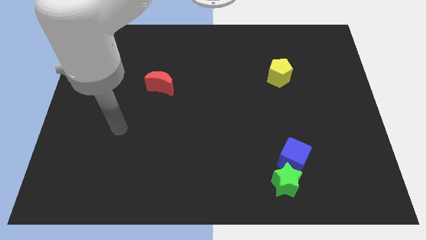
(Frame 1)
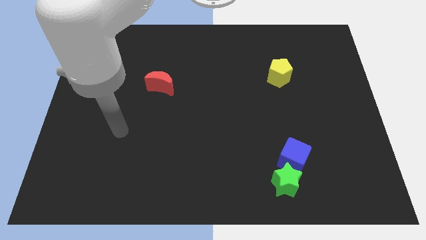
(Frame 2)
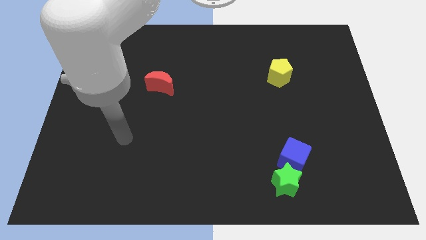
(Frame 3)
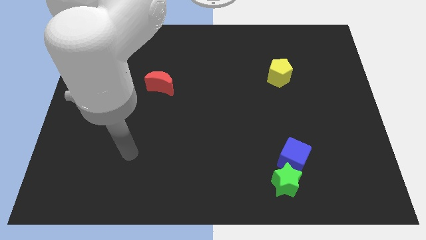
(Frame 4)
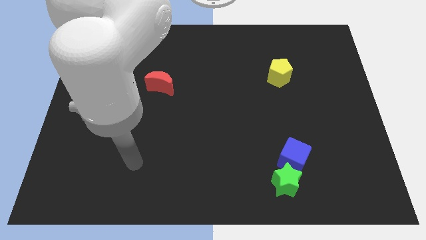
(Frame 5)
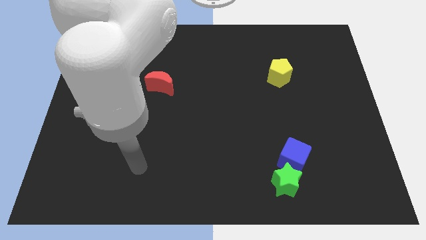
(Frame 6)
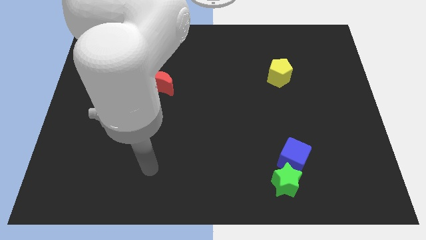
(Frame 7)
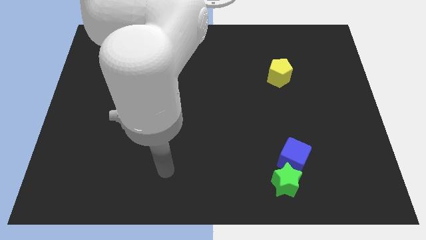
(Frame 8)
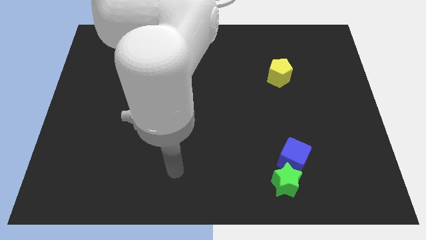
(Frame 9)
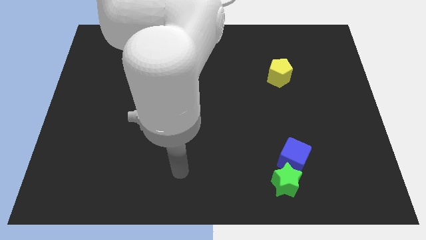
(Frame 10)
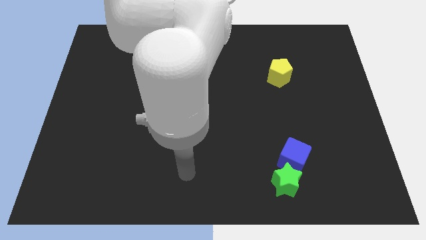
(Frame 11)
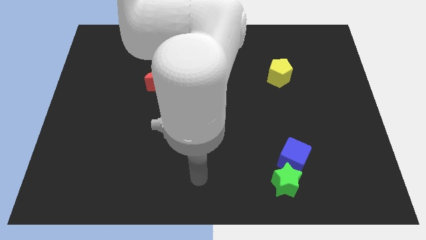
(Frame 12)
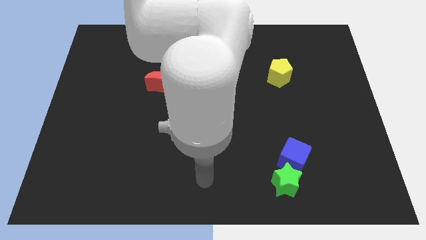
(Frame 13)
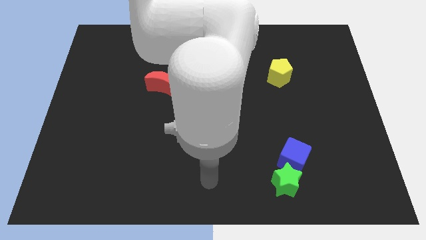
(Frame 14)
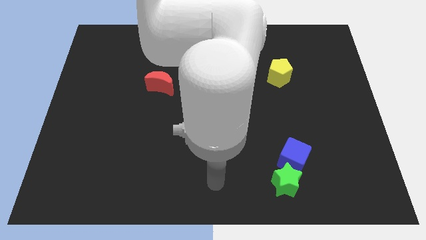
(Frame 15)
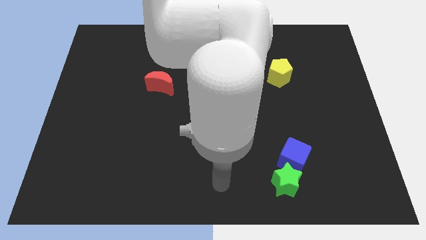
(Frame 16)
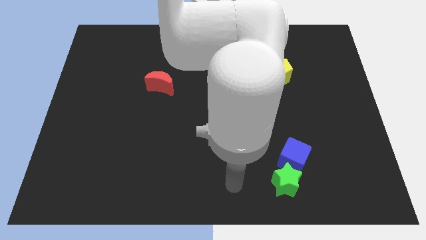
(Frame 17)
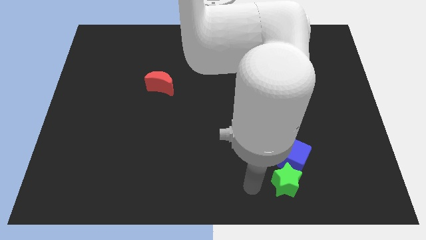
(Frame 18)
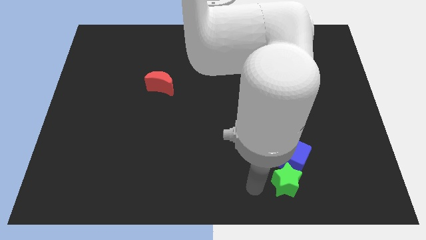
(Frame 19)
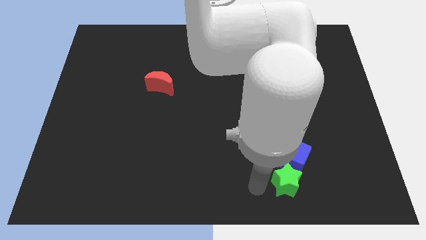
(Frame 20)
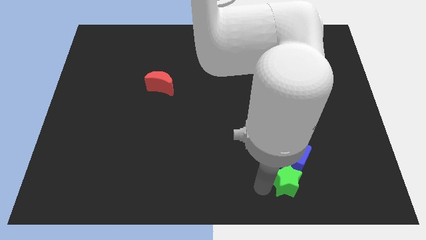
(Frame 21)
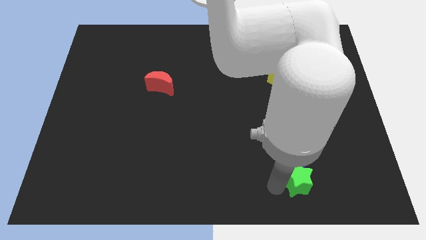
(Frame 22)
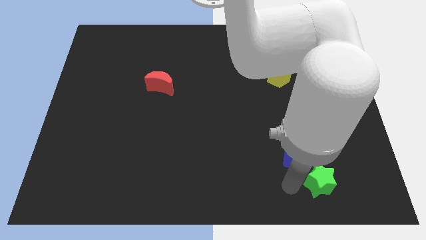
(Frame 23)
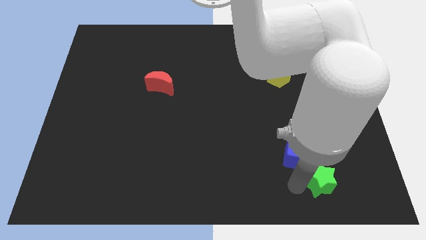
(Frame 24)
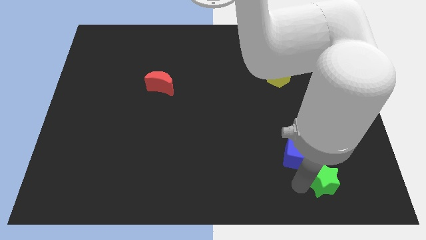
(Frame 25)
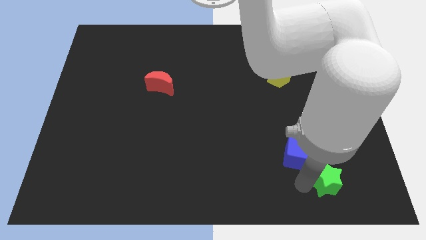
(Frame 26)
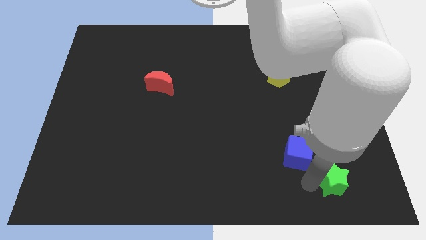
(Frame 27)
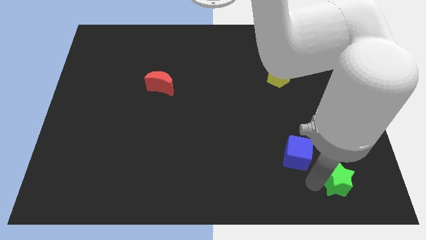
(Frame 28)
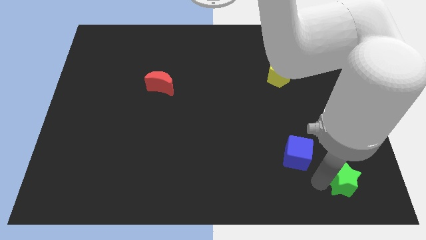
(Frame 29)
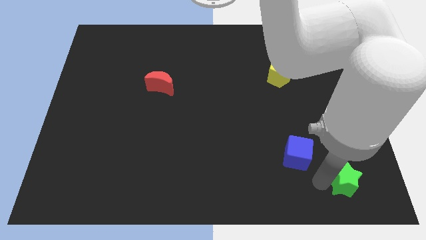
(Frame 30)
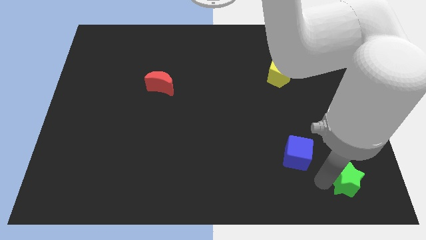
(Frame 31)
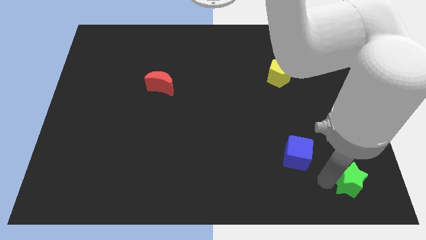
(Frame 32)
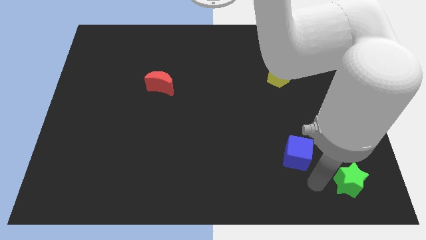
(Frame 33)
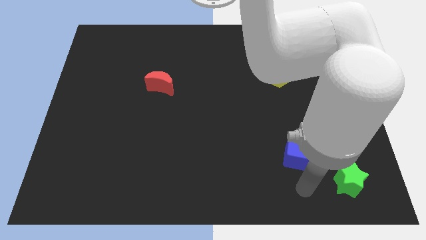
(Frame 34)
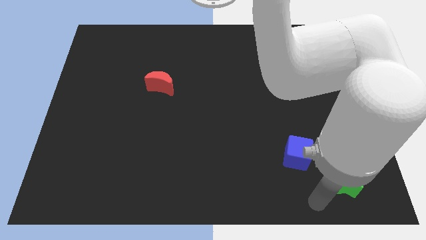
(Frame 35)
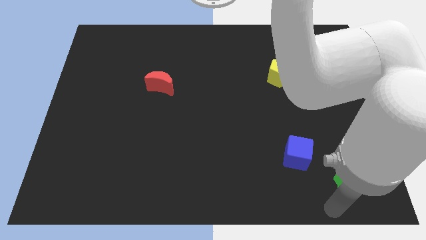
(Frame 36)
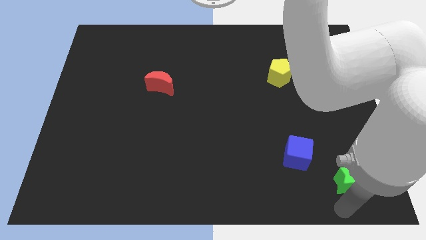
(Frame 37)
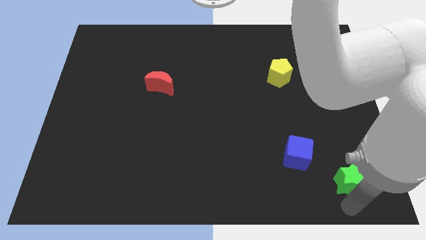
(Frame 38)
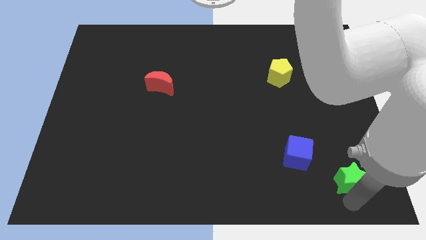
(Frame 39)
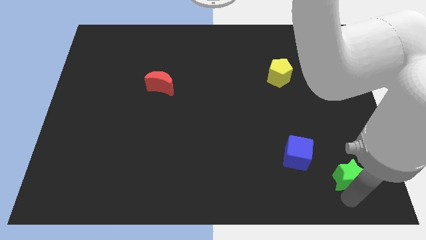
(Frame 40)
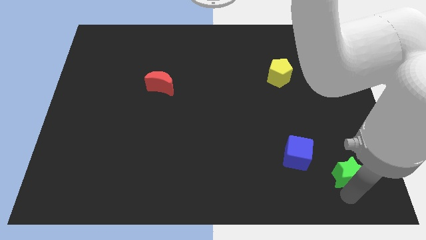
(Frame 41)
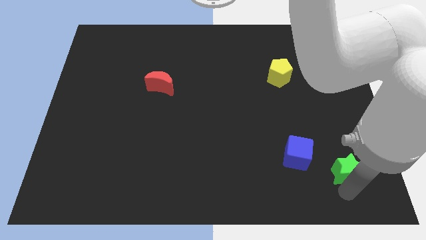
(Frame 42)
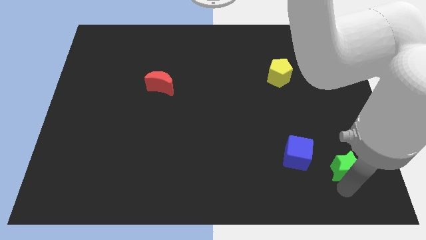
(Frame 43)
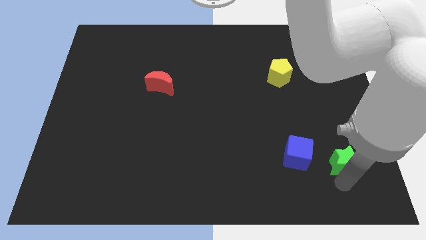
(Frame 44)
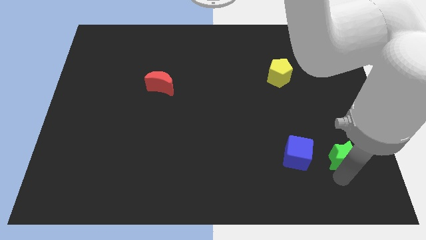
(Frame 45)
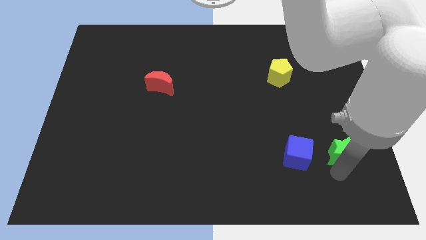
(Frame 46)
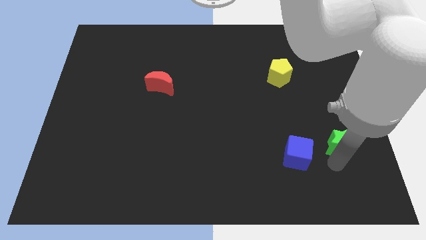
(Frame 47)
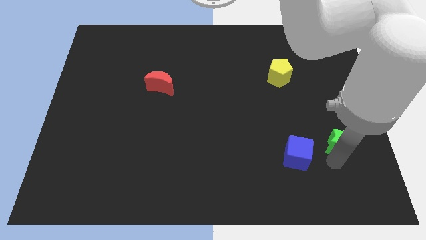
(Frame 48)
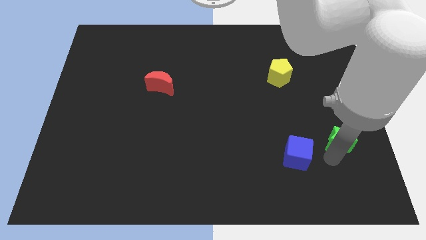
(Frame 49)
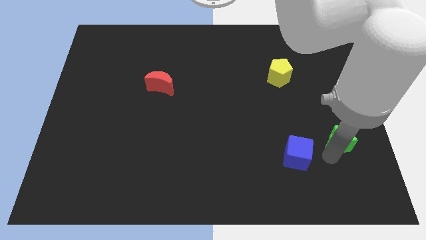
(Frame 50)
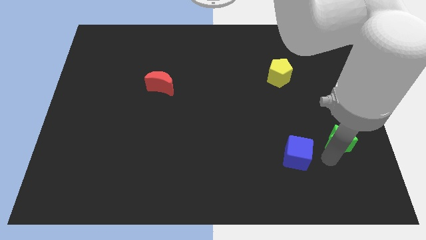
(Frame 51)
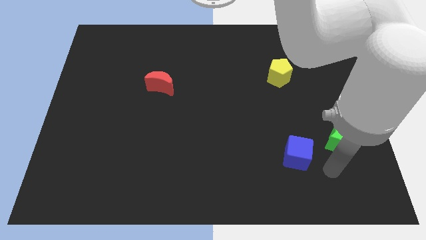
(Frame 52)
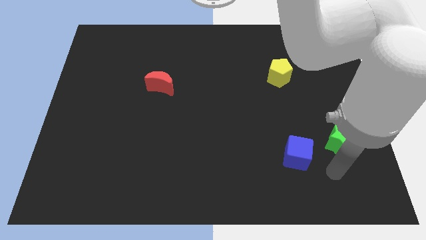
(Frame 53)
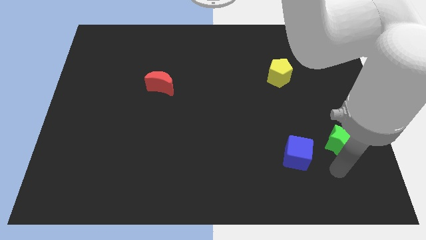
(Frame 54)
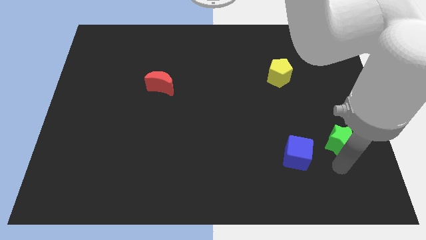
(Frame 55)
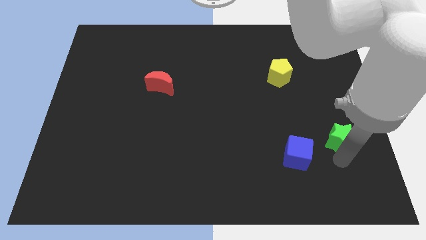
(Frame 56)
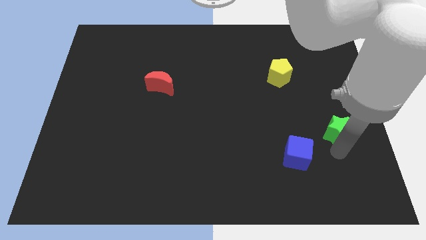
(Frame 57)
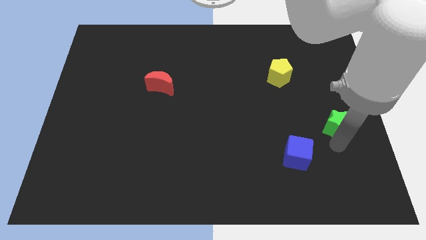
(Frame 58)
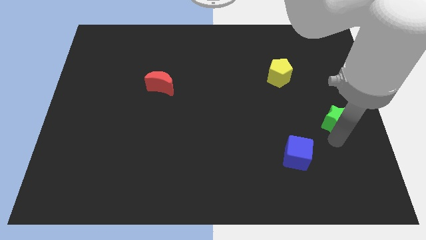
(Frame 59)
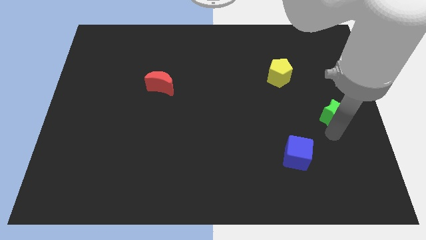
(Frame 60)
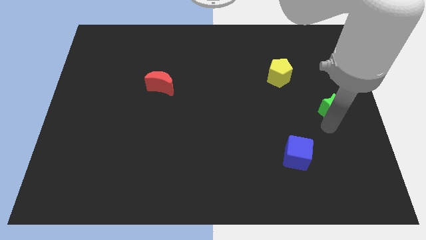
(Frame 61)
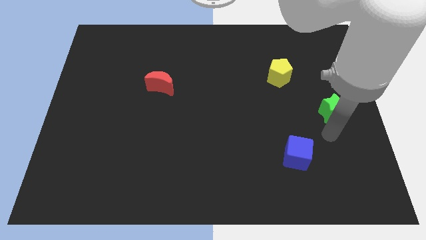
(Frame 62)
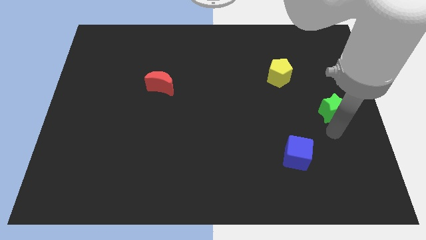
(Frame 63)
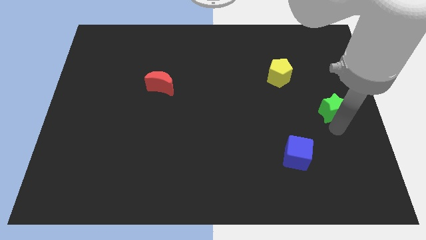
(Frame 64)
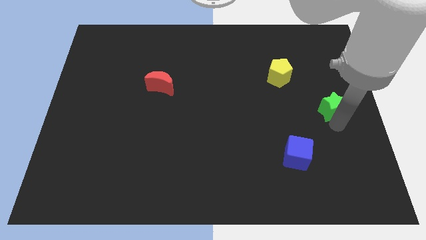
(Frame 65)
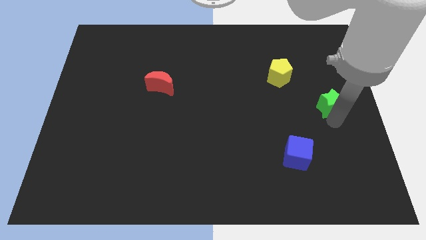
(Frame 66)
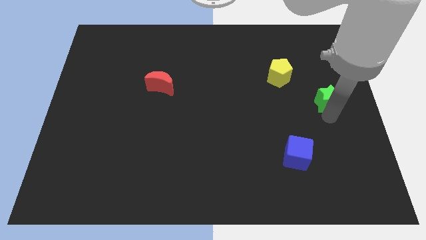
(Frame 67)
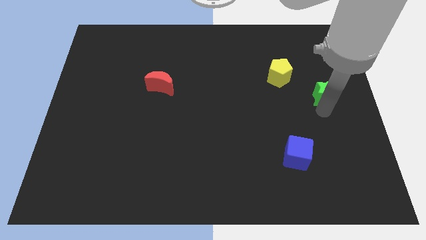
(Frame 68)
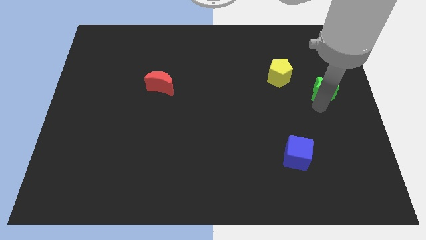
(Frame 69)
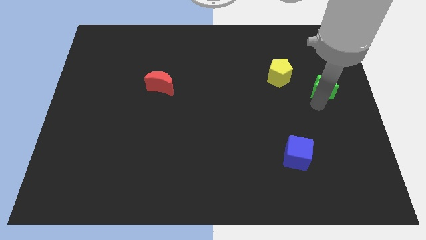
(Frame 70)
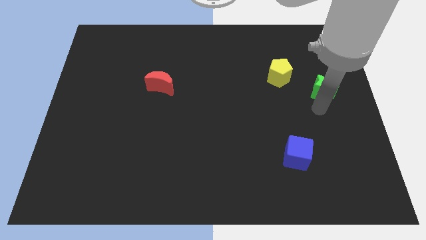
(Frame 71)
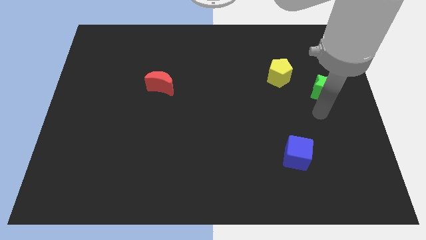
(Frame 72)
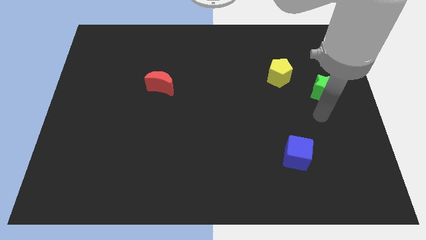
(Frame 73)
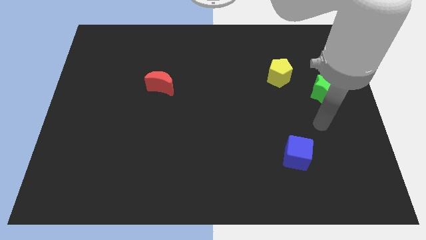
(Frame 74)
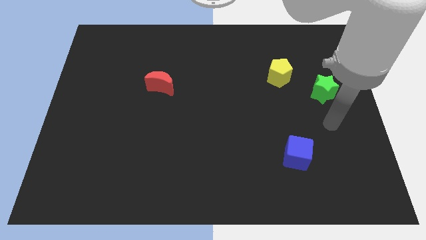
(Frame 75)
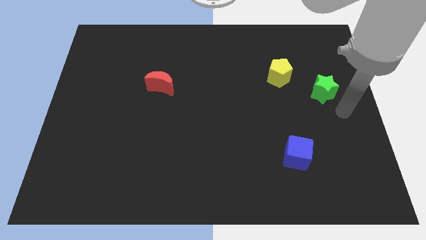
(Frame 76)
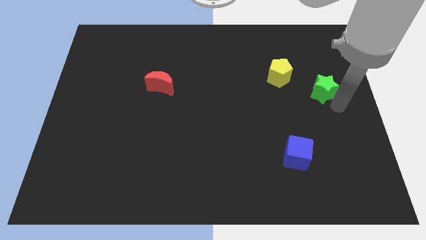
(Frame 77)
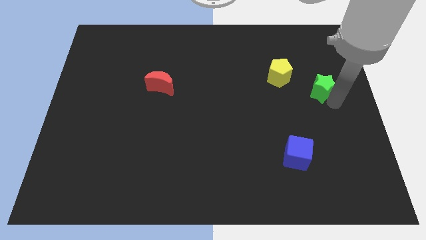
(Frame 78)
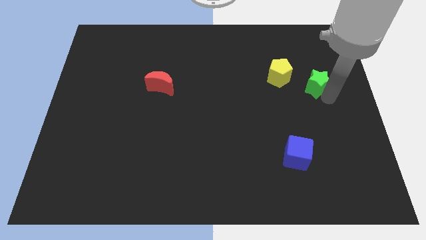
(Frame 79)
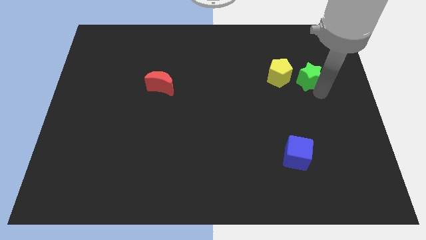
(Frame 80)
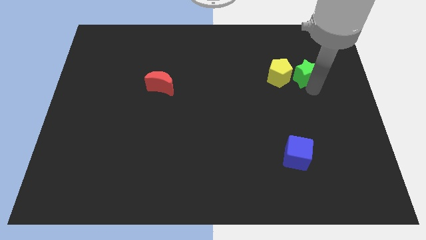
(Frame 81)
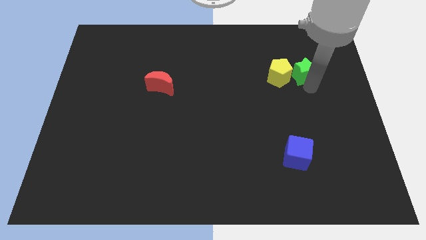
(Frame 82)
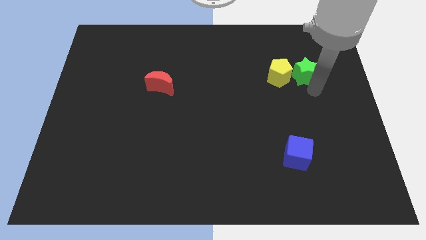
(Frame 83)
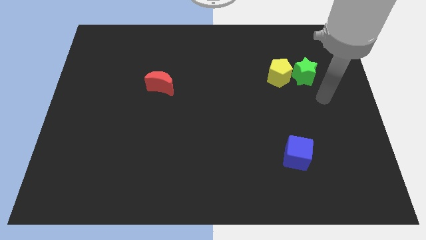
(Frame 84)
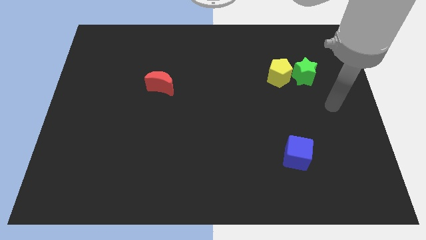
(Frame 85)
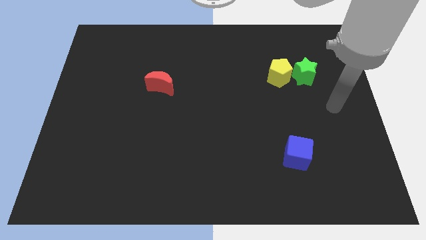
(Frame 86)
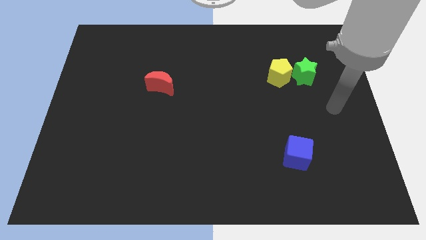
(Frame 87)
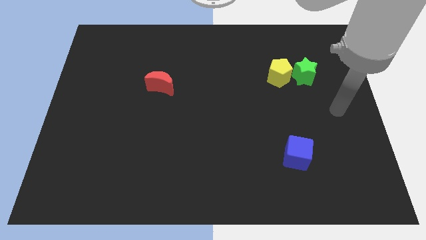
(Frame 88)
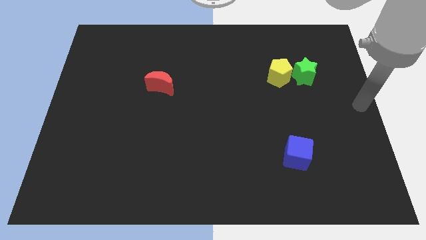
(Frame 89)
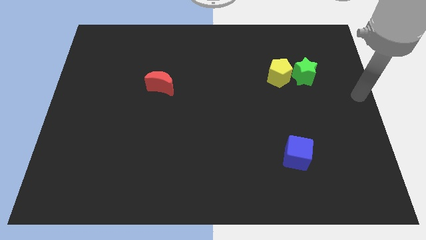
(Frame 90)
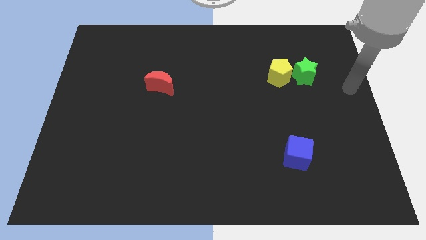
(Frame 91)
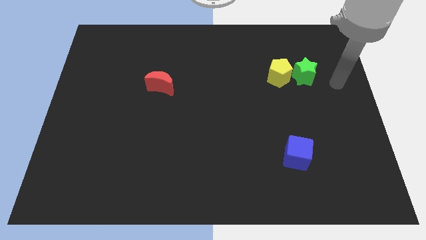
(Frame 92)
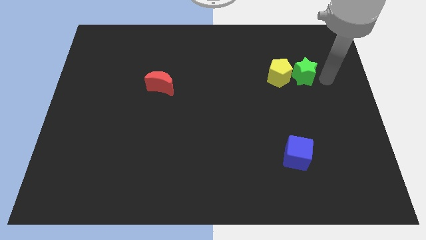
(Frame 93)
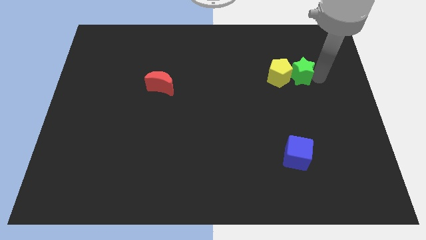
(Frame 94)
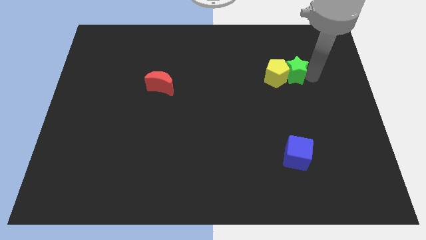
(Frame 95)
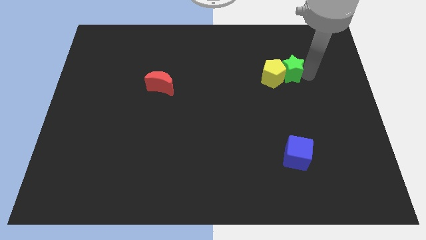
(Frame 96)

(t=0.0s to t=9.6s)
move the green star close to the pentagon
